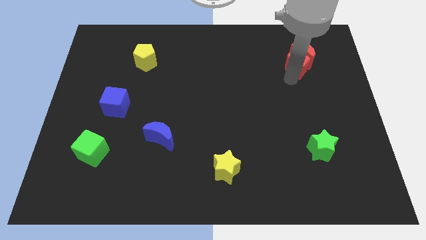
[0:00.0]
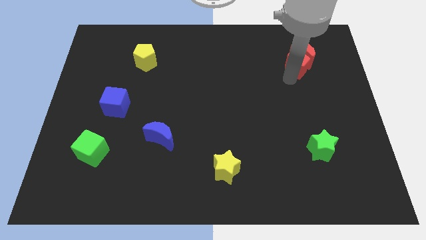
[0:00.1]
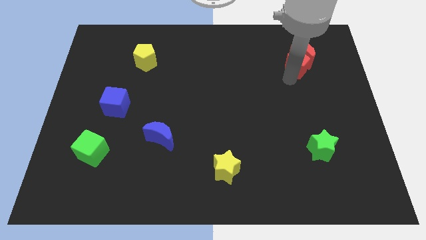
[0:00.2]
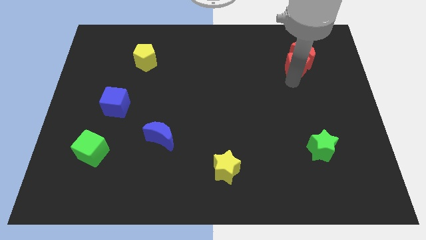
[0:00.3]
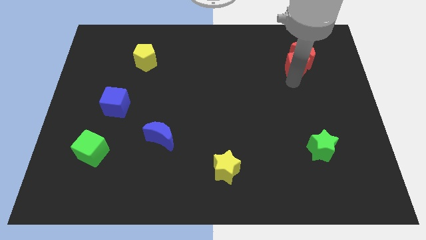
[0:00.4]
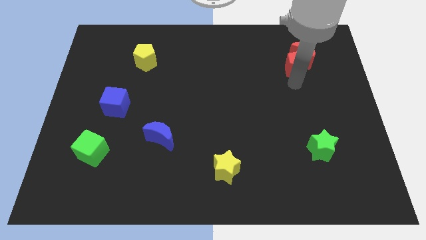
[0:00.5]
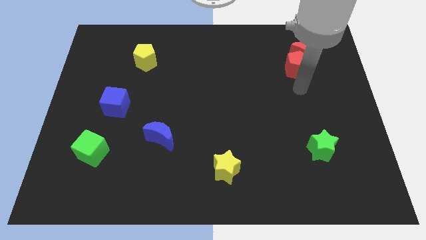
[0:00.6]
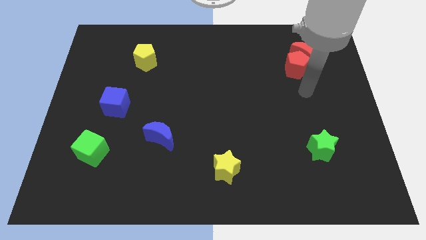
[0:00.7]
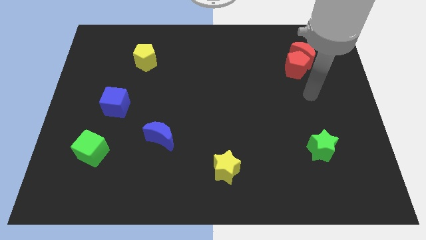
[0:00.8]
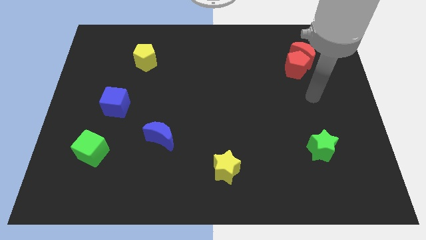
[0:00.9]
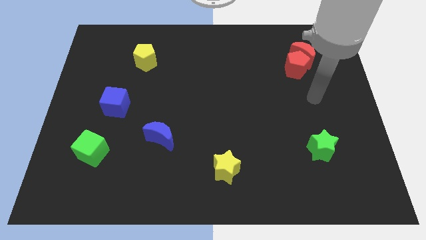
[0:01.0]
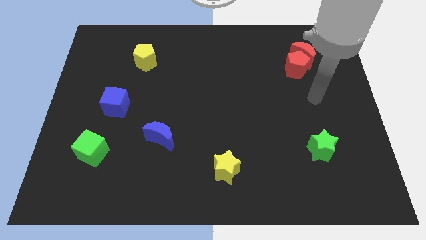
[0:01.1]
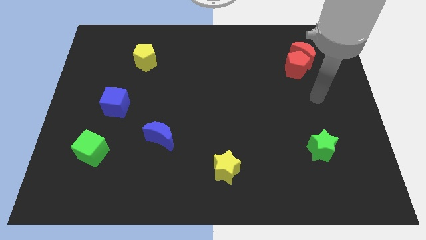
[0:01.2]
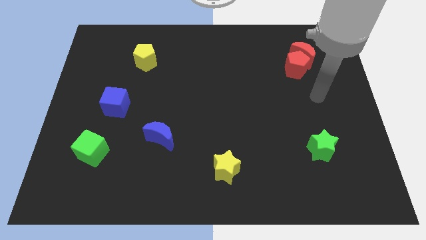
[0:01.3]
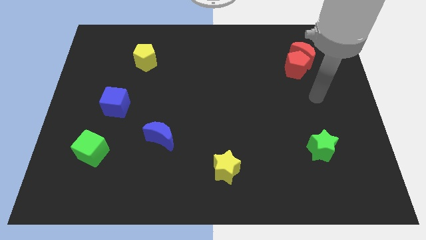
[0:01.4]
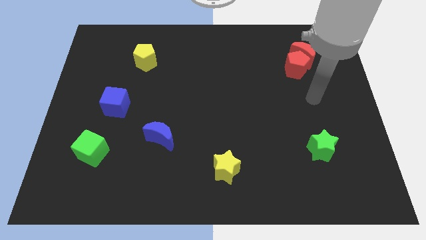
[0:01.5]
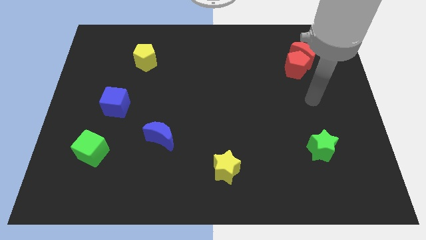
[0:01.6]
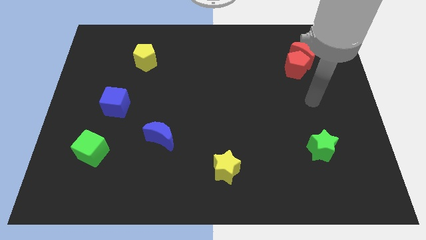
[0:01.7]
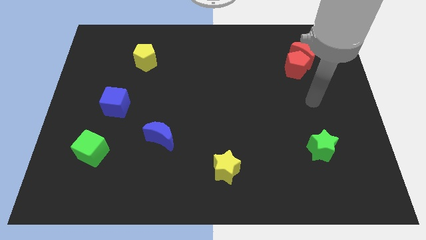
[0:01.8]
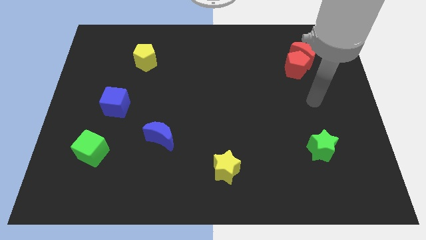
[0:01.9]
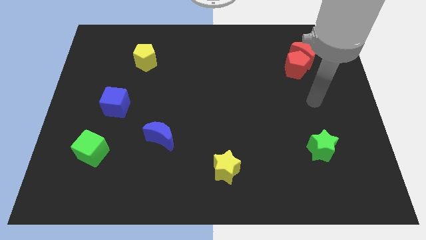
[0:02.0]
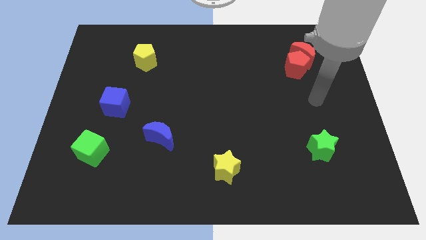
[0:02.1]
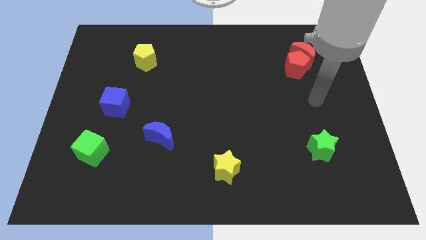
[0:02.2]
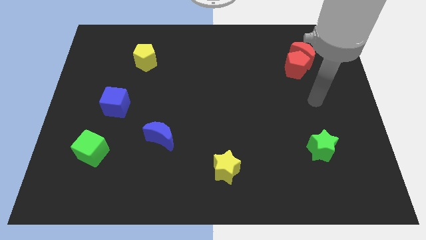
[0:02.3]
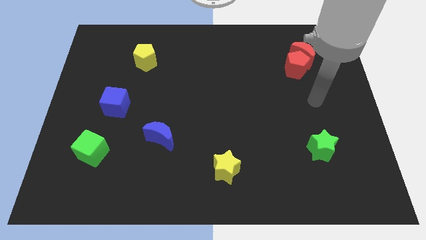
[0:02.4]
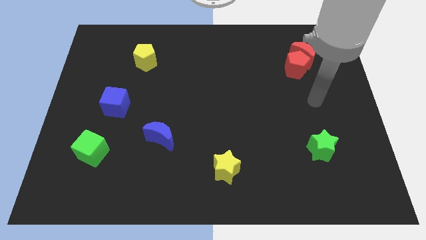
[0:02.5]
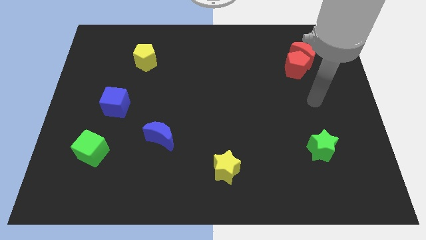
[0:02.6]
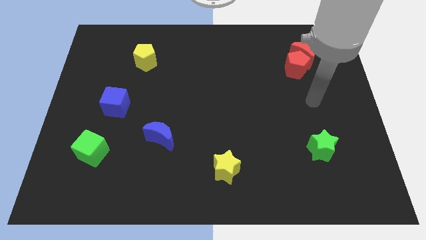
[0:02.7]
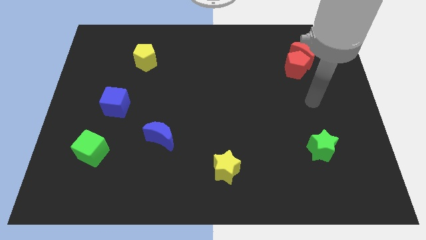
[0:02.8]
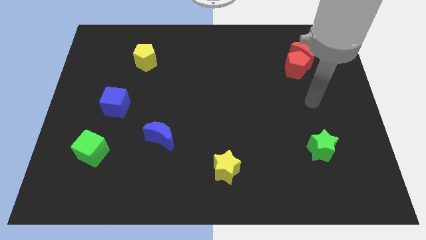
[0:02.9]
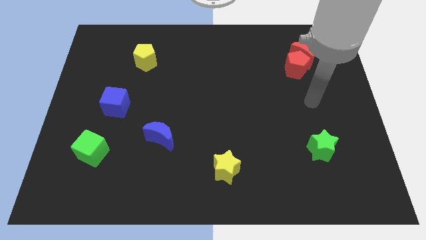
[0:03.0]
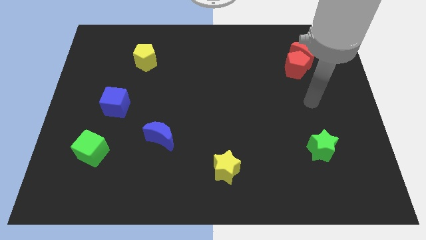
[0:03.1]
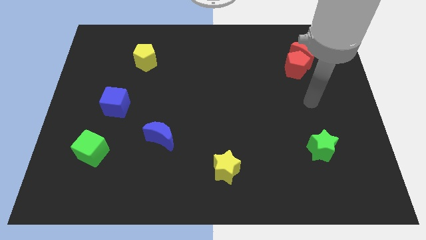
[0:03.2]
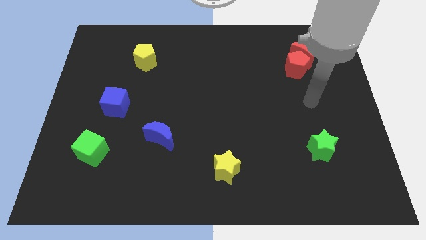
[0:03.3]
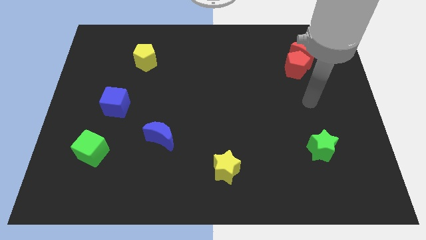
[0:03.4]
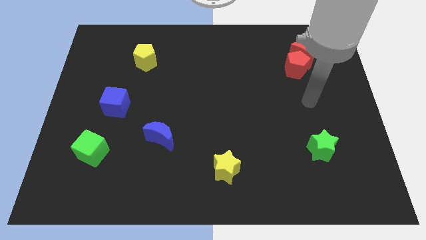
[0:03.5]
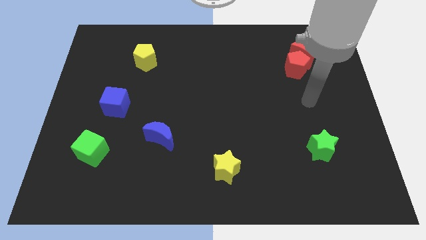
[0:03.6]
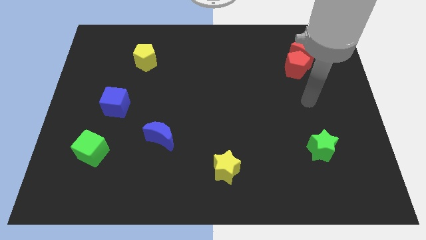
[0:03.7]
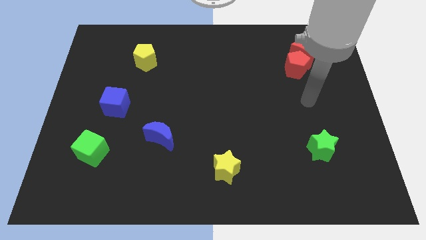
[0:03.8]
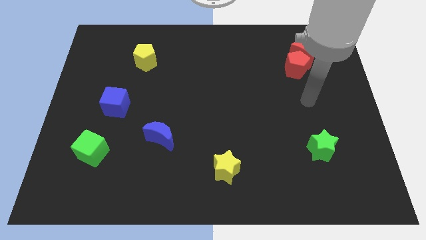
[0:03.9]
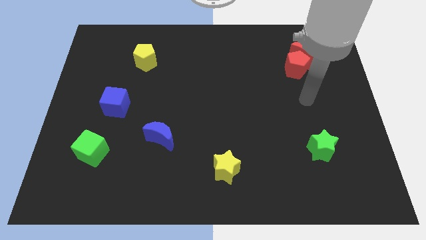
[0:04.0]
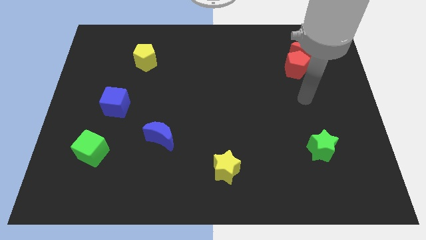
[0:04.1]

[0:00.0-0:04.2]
move your arm away from red pentagon

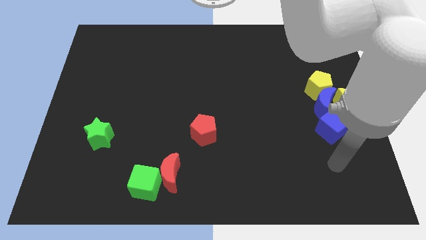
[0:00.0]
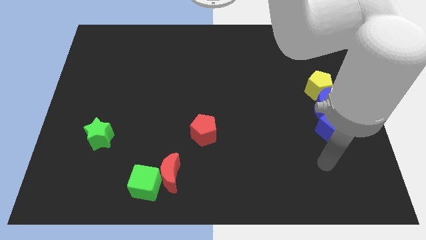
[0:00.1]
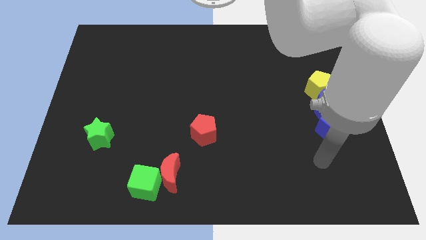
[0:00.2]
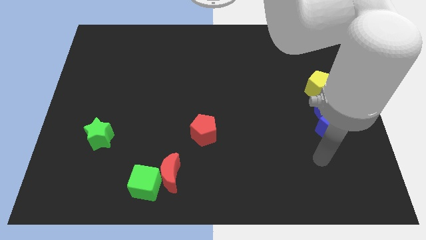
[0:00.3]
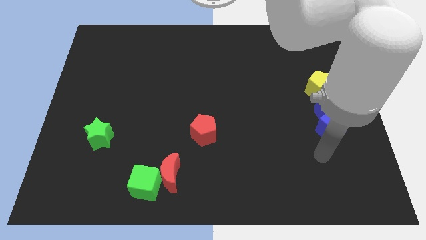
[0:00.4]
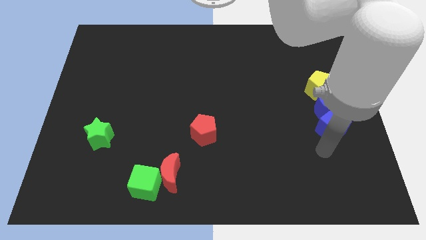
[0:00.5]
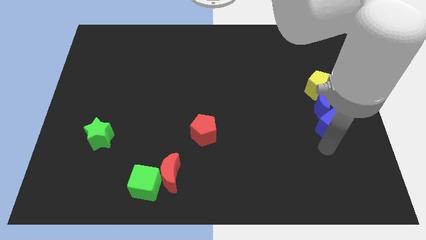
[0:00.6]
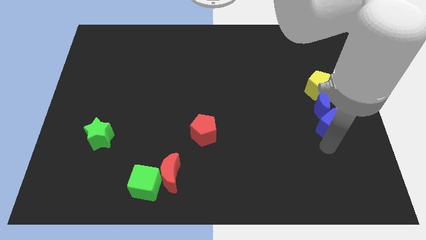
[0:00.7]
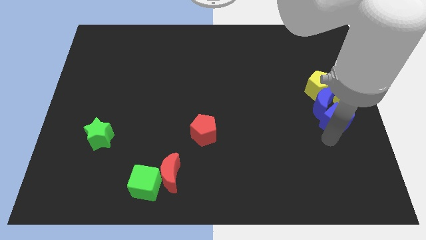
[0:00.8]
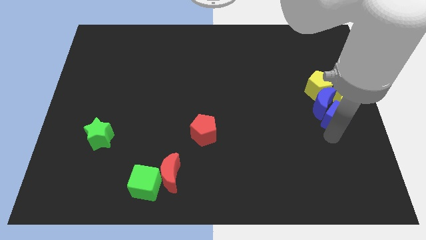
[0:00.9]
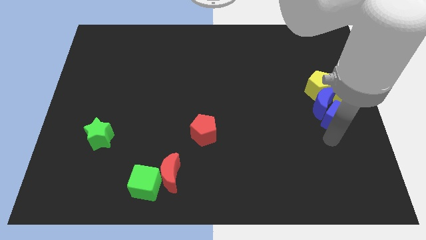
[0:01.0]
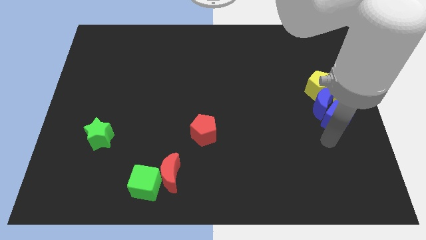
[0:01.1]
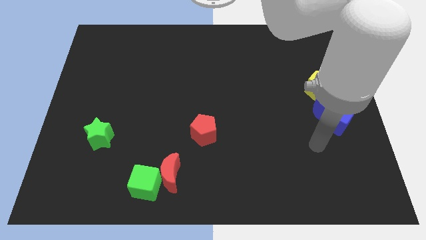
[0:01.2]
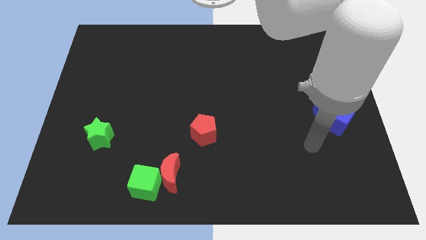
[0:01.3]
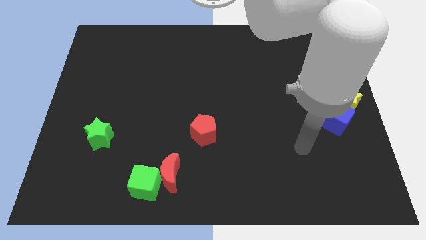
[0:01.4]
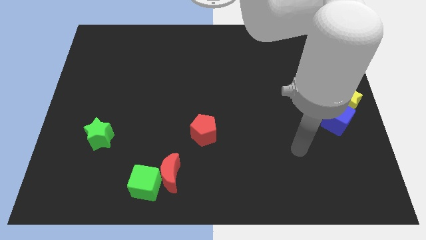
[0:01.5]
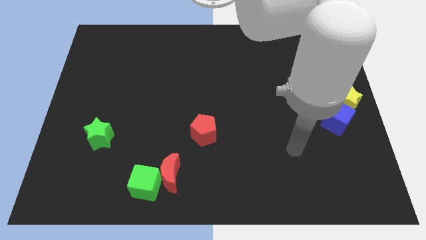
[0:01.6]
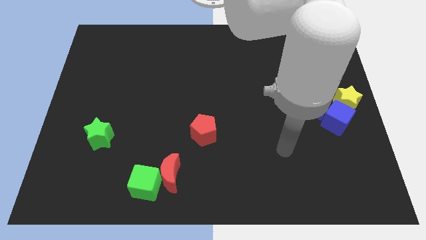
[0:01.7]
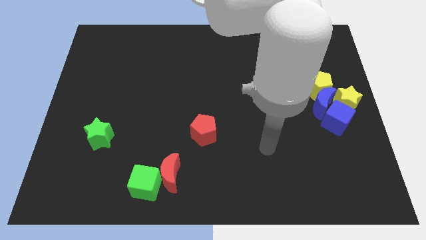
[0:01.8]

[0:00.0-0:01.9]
move the blue cube to the right side of the blue crescent

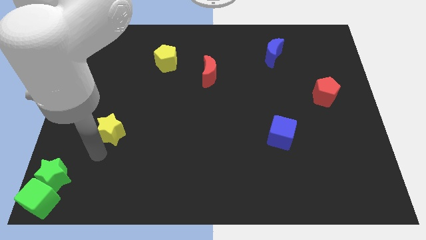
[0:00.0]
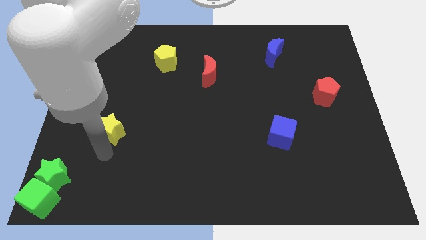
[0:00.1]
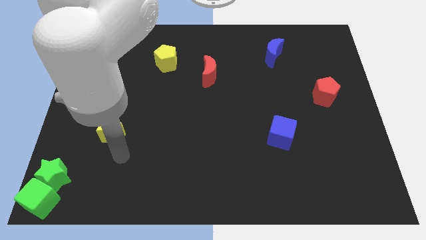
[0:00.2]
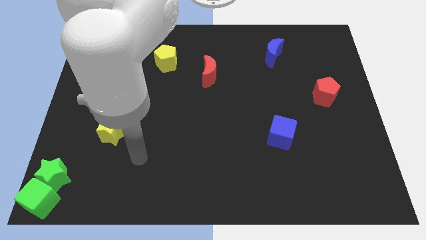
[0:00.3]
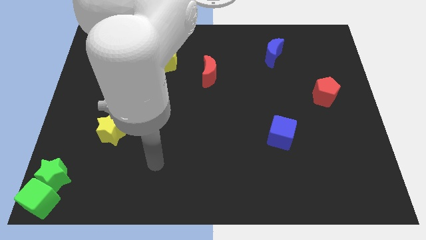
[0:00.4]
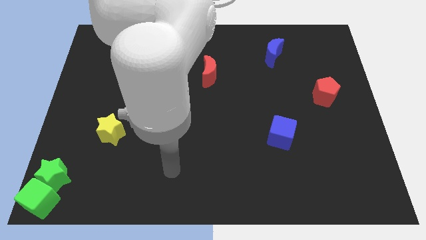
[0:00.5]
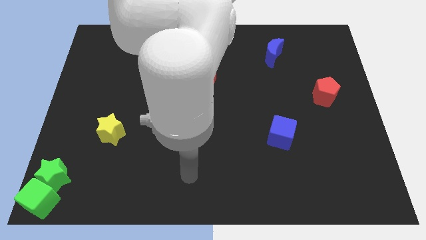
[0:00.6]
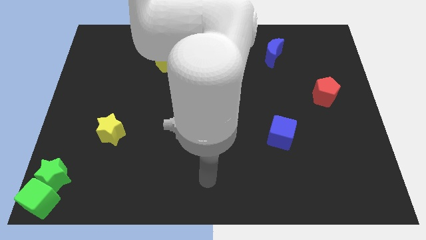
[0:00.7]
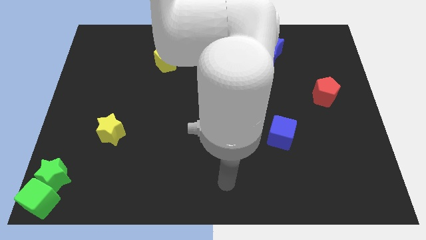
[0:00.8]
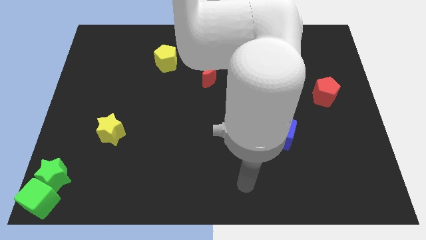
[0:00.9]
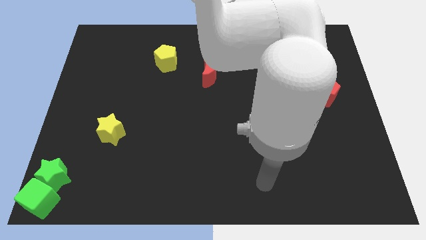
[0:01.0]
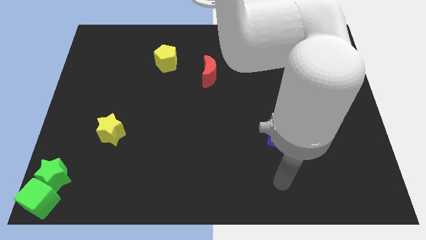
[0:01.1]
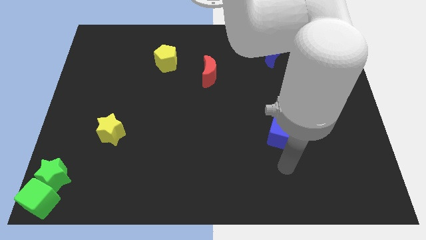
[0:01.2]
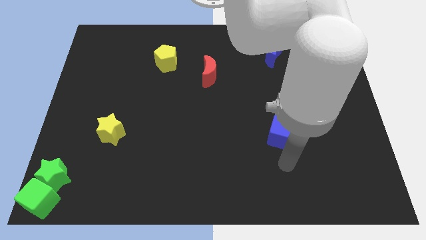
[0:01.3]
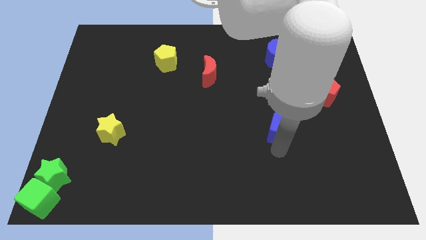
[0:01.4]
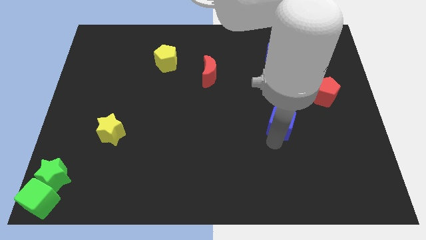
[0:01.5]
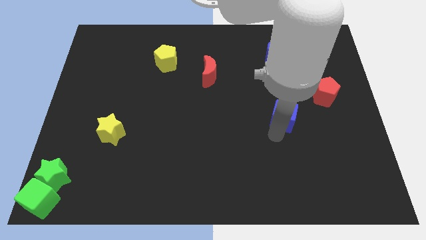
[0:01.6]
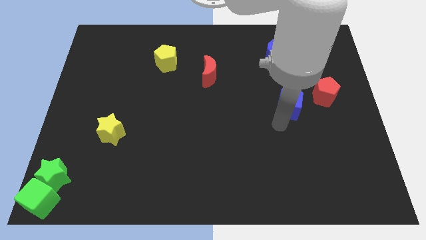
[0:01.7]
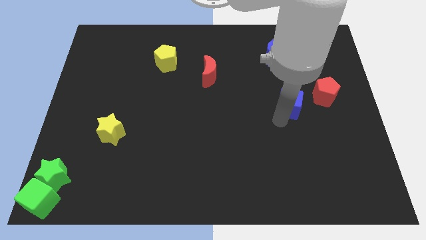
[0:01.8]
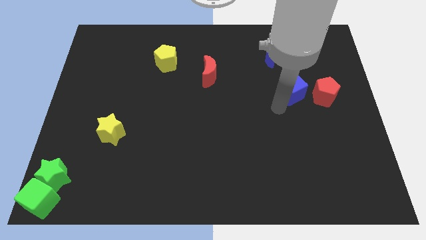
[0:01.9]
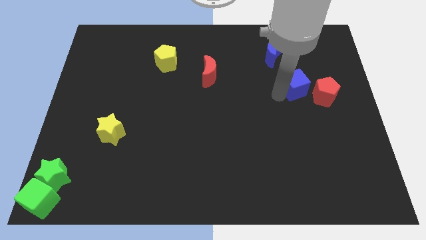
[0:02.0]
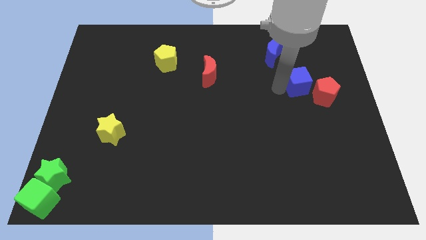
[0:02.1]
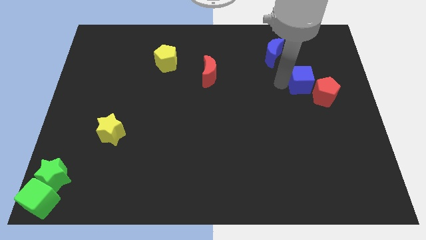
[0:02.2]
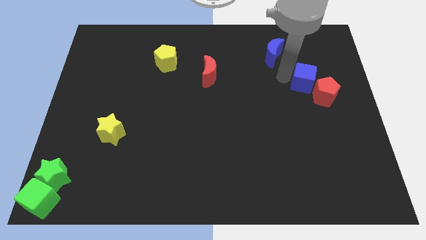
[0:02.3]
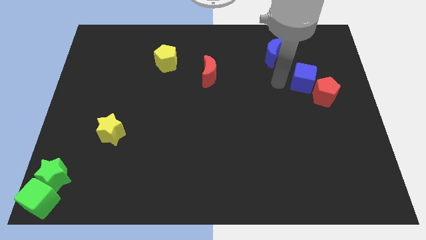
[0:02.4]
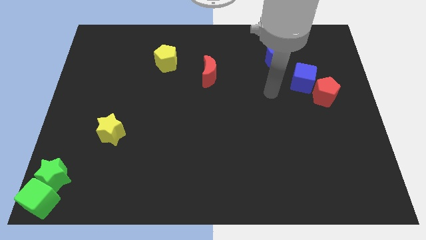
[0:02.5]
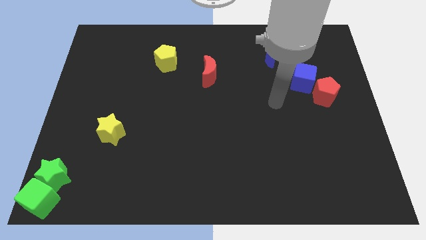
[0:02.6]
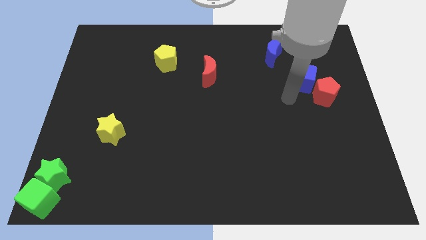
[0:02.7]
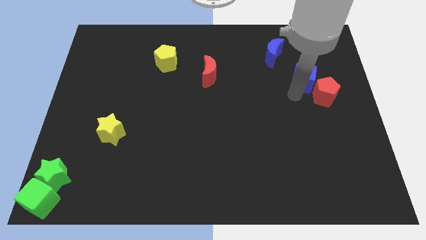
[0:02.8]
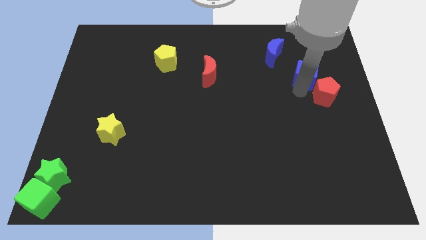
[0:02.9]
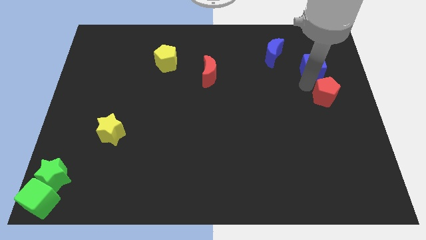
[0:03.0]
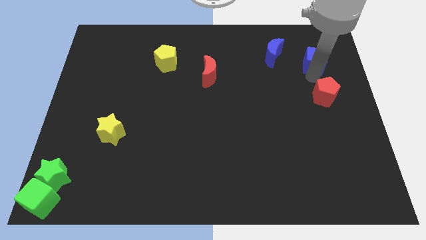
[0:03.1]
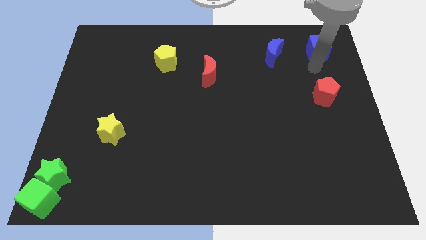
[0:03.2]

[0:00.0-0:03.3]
move the blue cube to the top of the red pentagon
